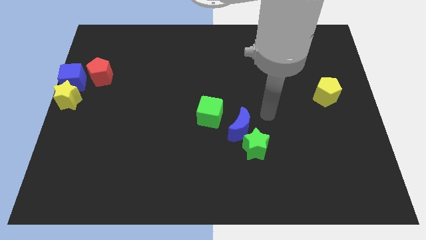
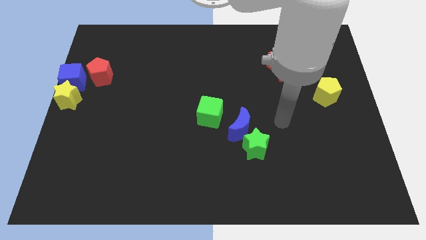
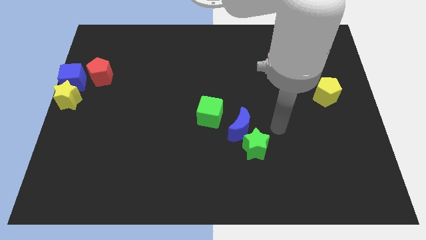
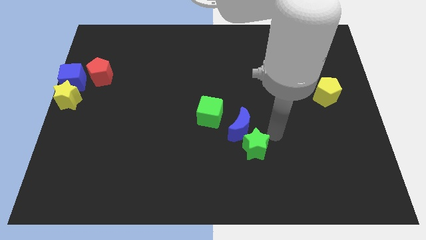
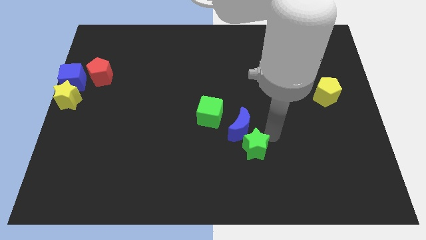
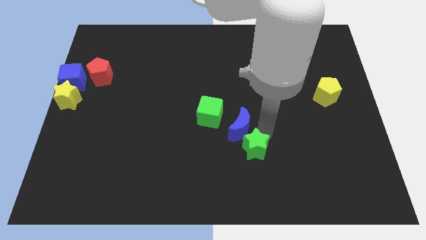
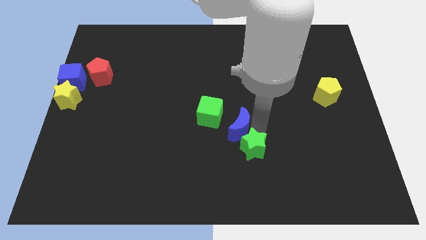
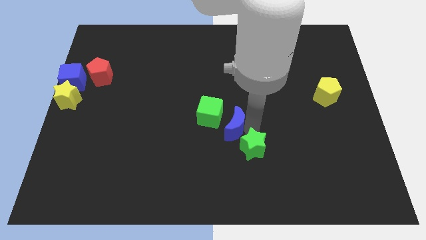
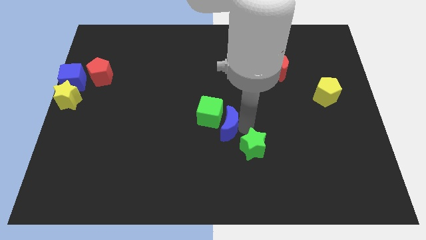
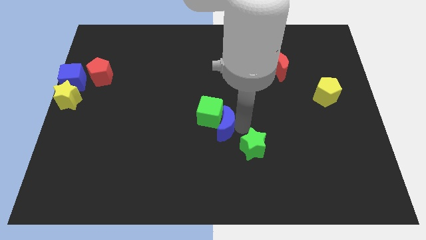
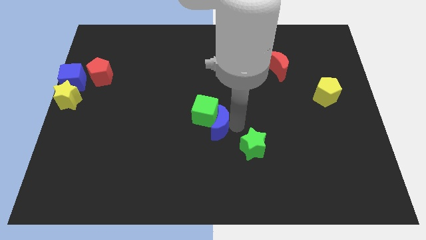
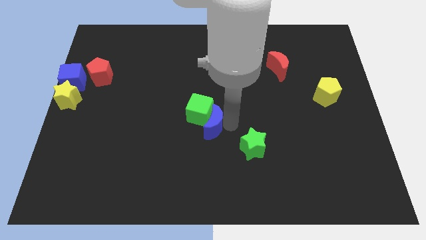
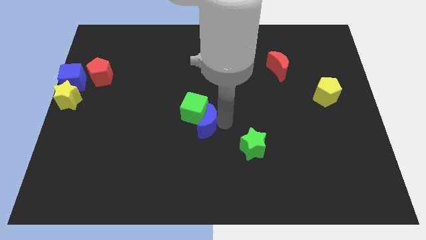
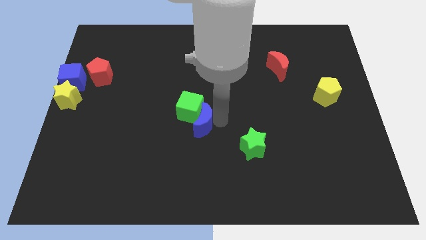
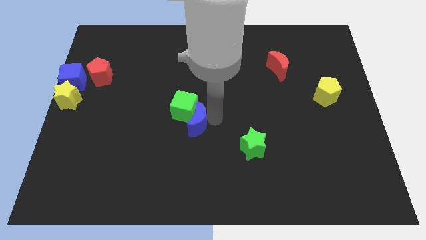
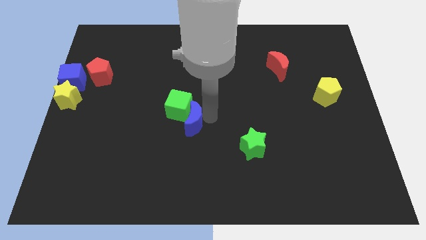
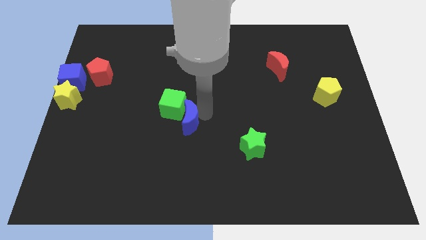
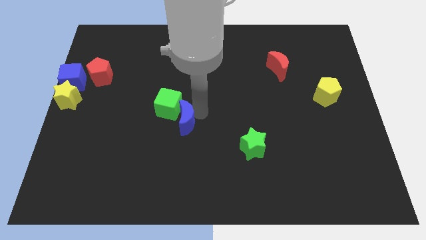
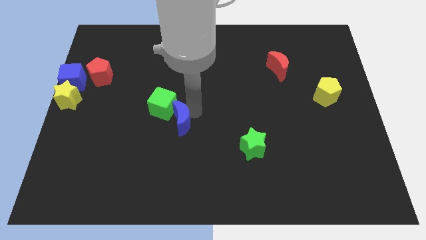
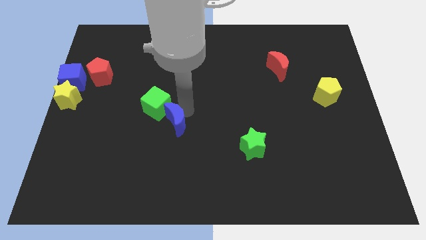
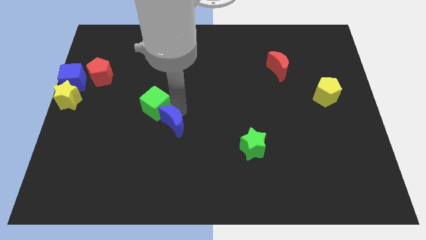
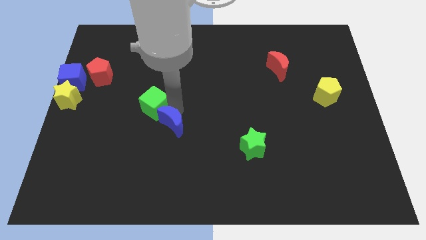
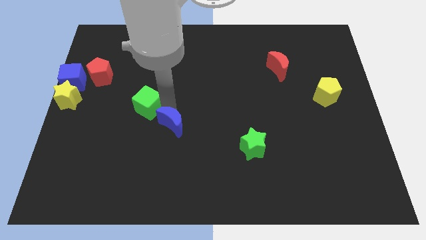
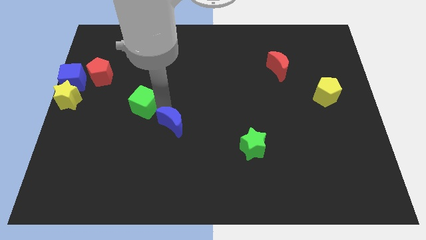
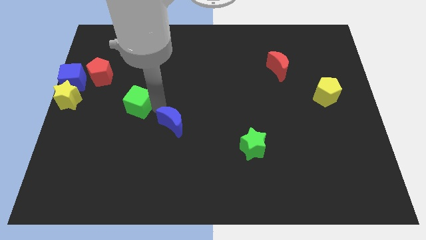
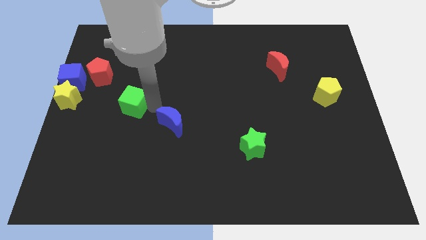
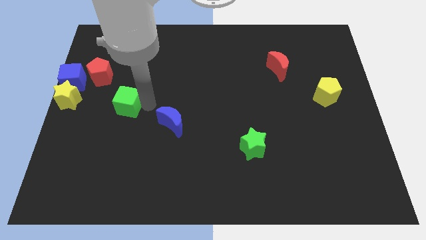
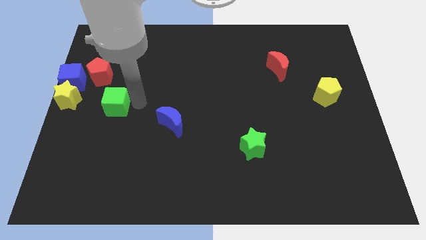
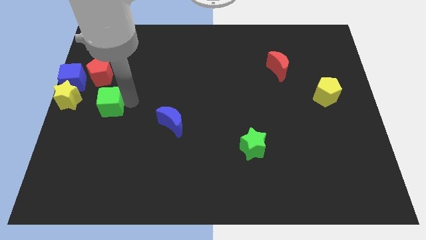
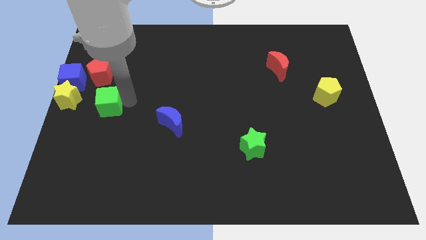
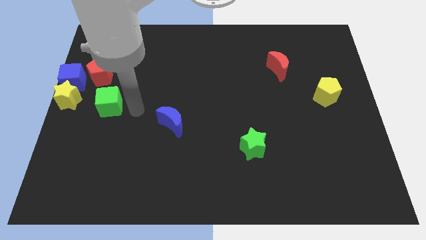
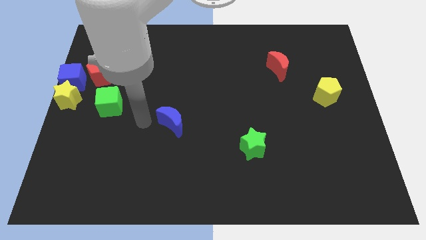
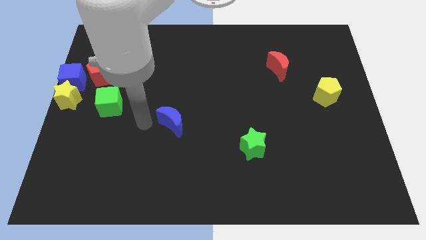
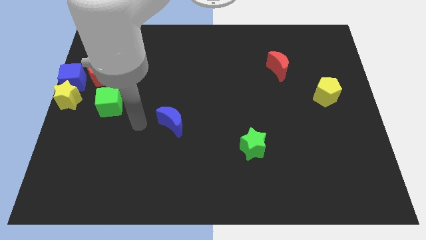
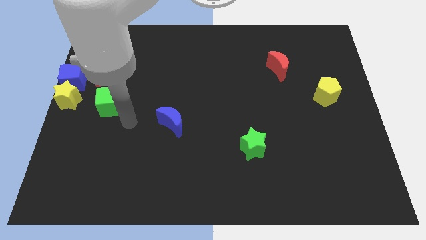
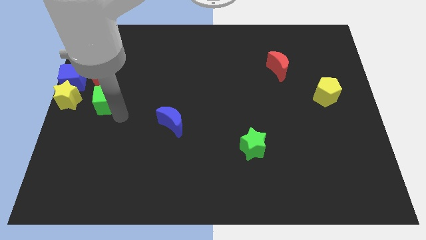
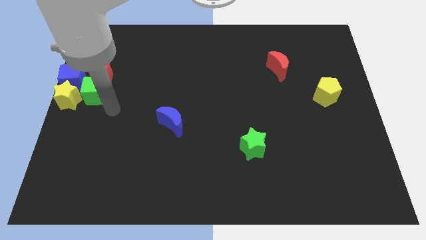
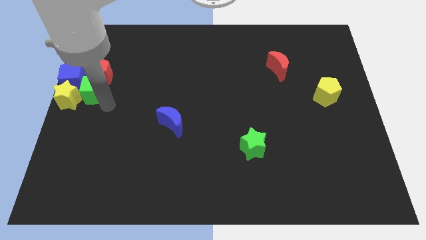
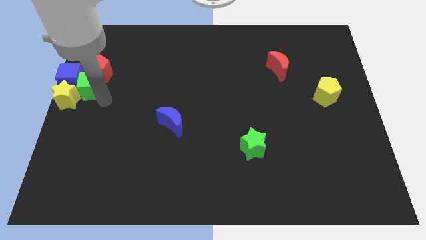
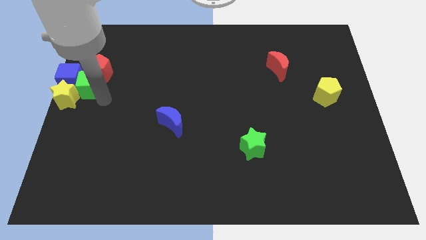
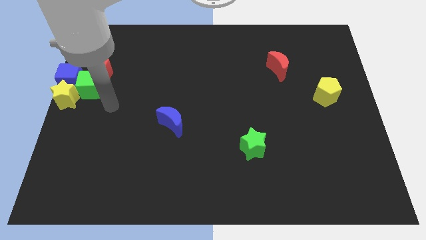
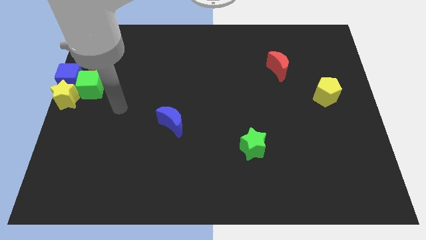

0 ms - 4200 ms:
push the green cube into the group of blocks

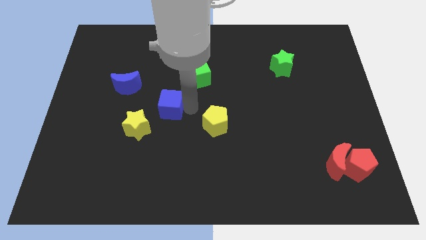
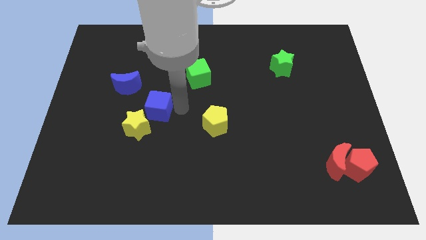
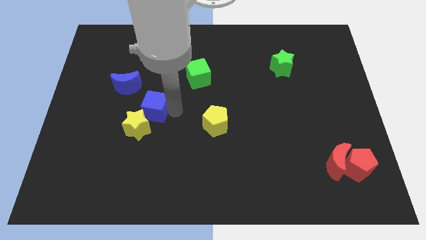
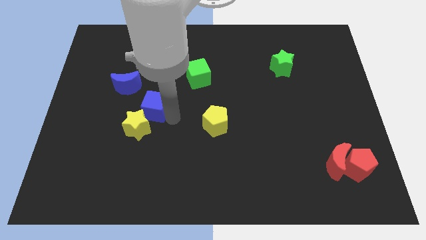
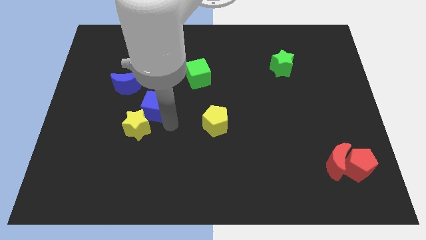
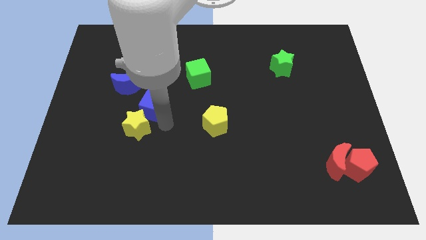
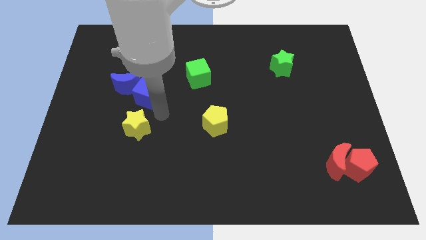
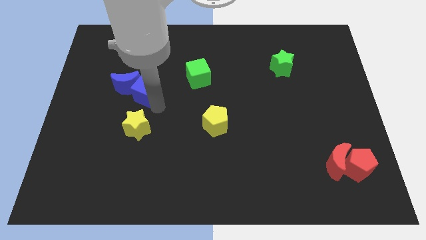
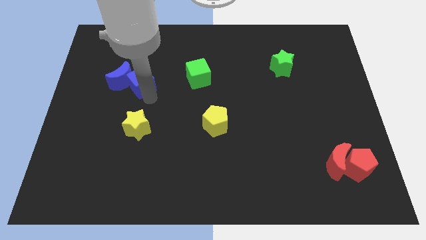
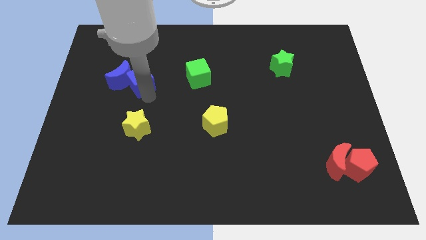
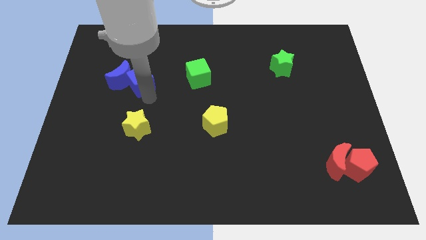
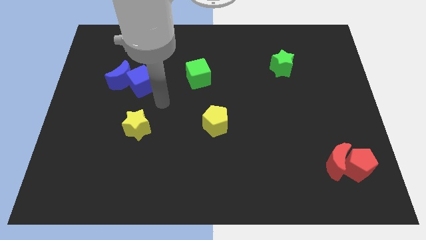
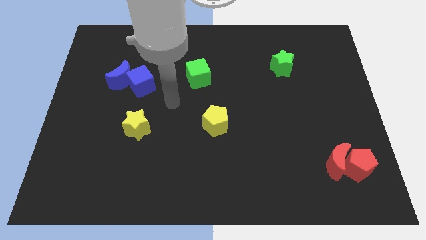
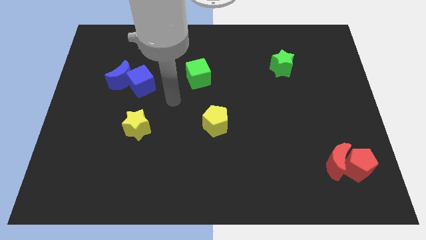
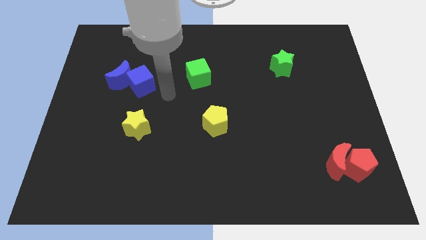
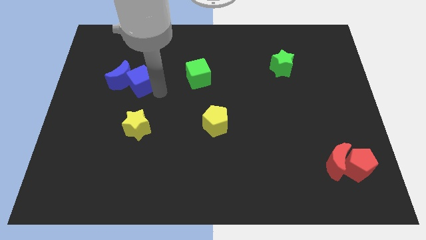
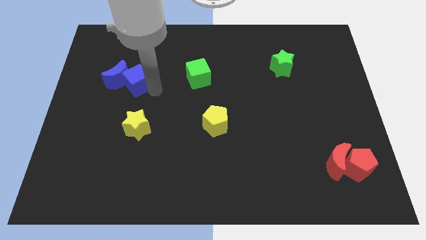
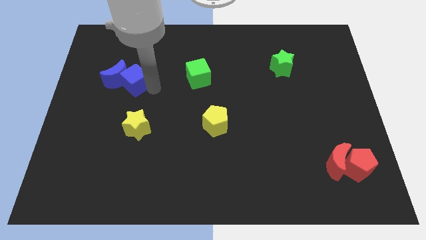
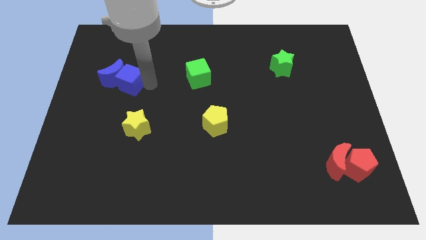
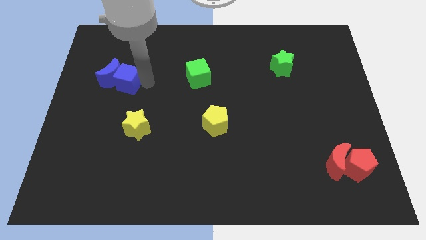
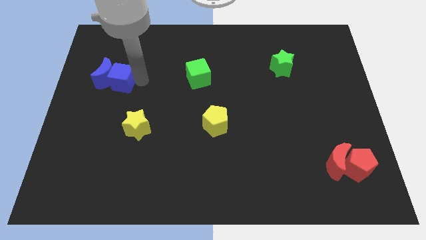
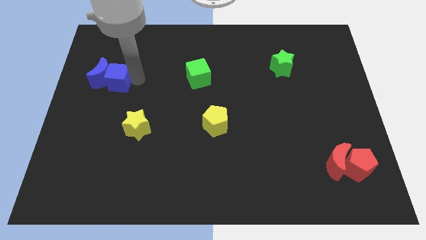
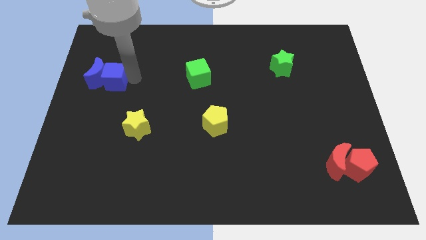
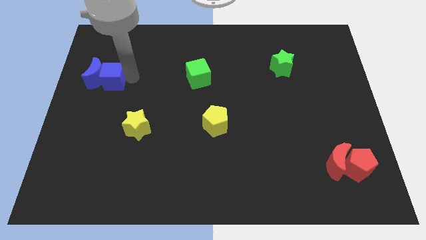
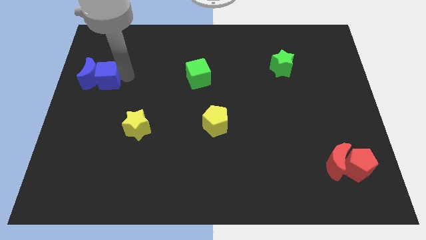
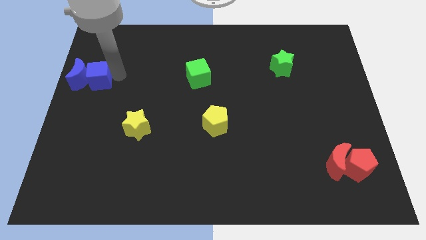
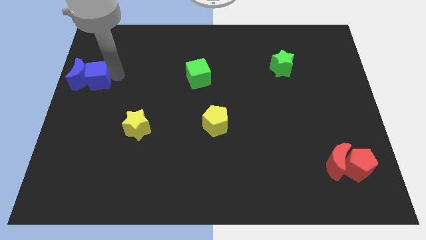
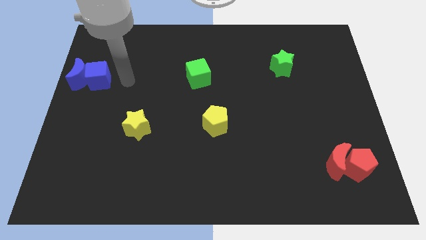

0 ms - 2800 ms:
move the blue cube to the right of the blue crescent

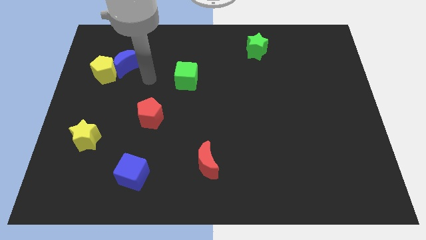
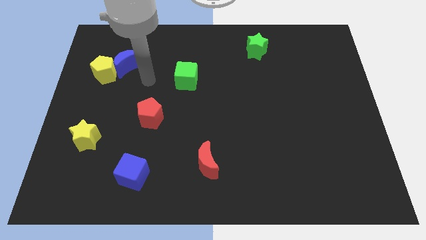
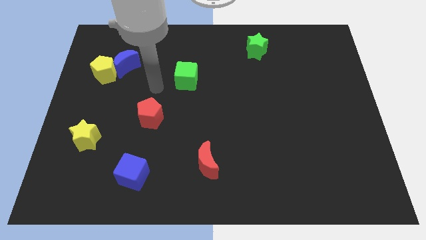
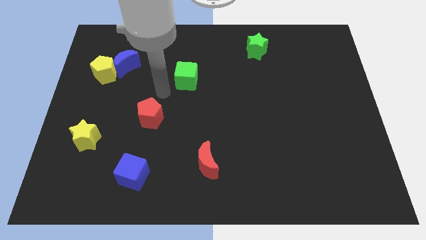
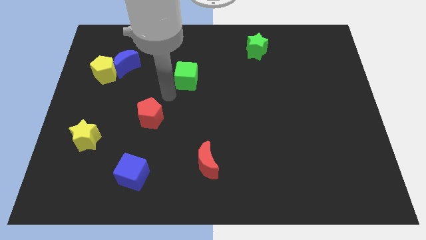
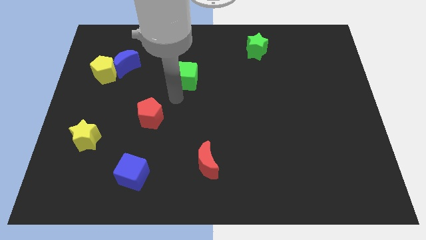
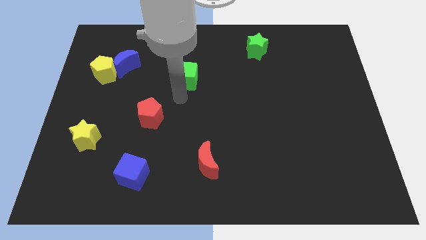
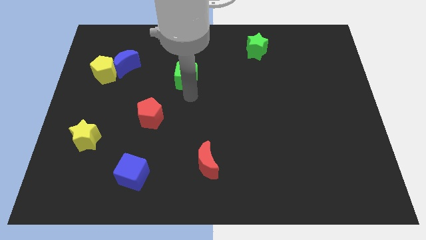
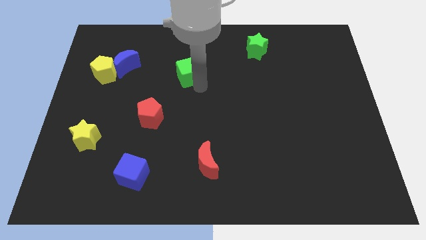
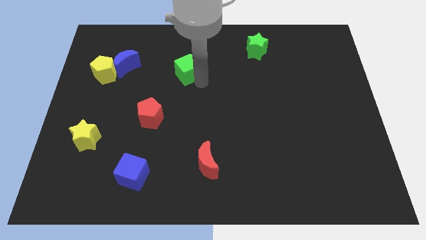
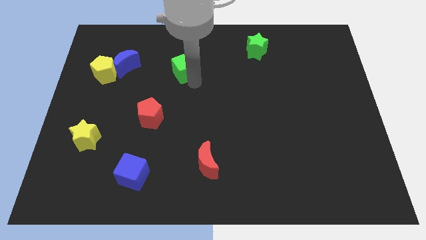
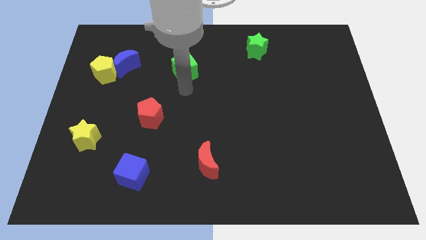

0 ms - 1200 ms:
slightly push the green cube to the top of the board

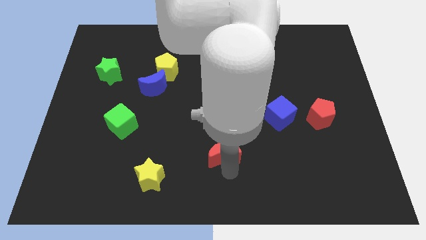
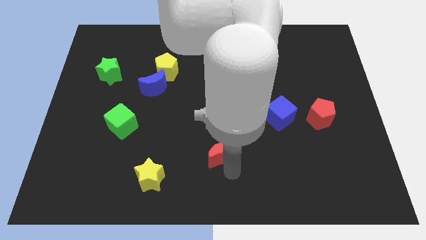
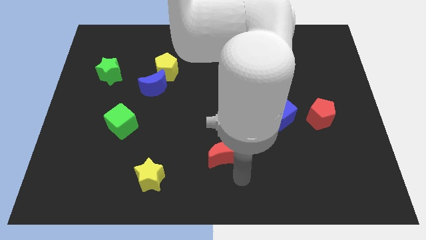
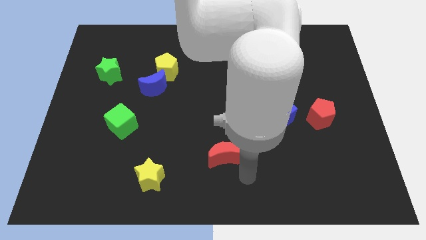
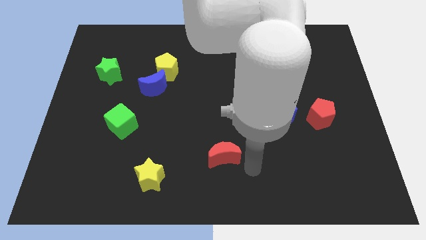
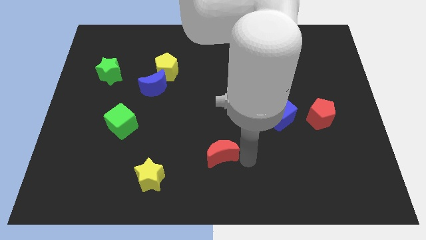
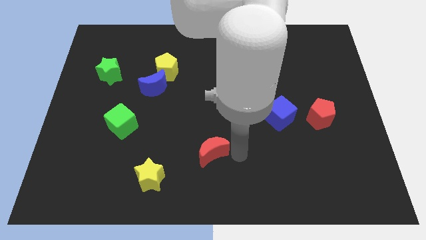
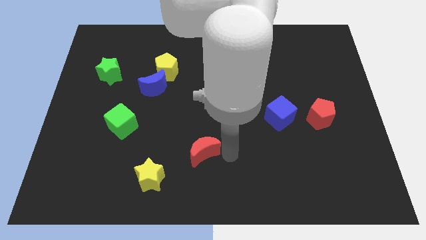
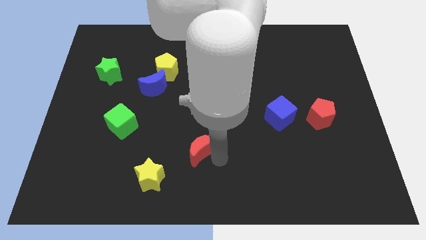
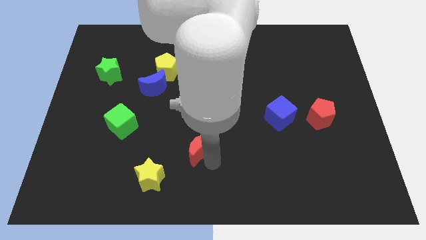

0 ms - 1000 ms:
move red moon slightly left
